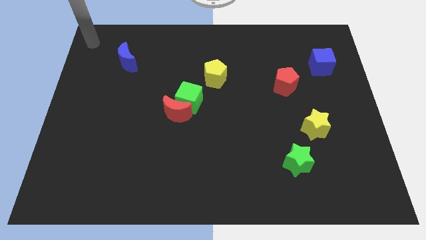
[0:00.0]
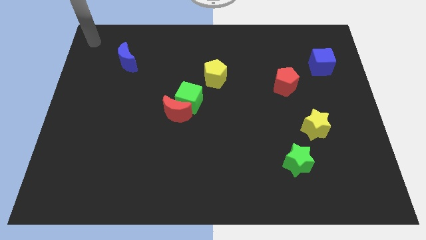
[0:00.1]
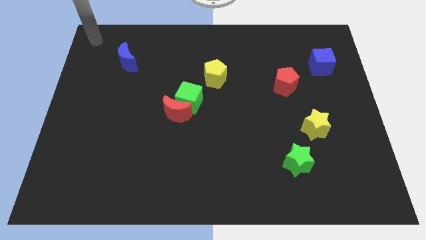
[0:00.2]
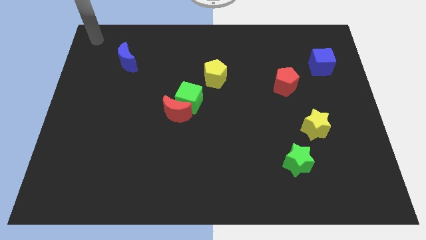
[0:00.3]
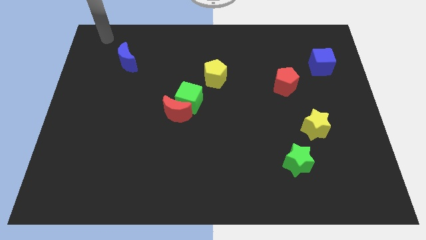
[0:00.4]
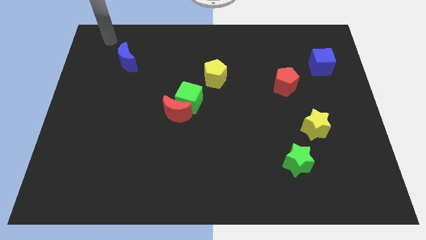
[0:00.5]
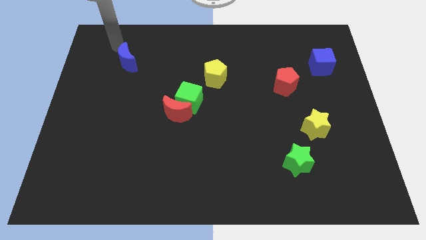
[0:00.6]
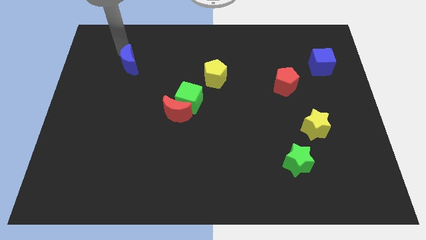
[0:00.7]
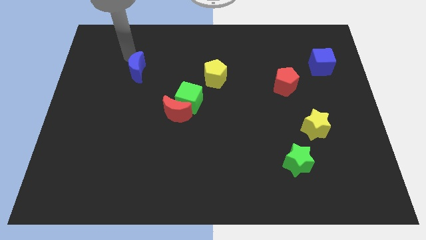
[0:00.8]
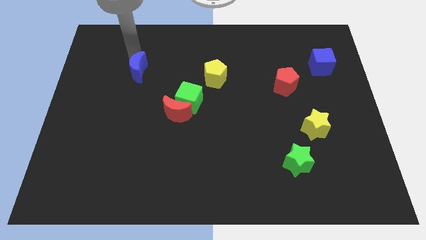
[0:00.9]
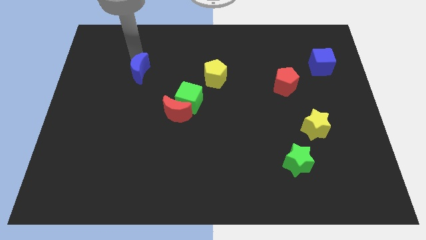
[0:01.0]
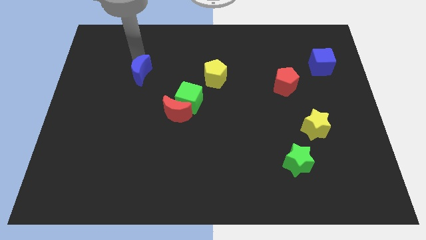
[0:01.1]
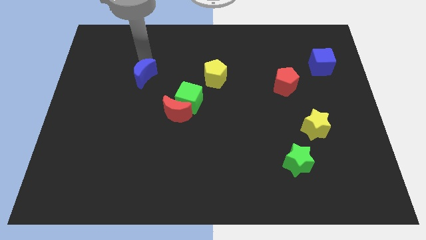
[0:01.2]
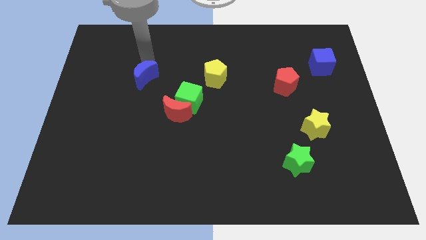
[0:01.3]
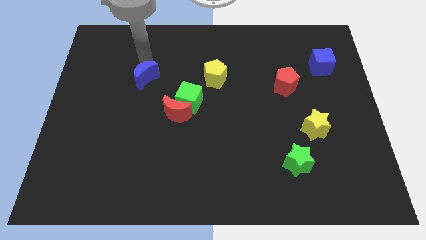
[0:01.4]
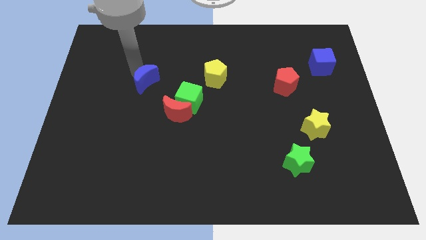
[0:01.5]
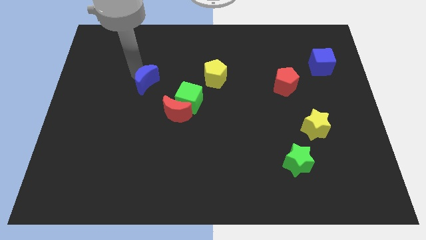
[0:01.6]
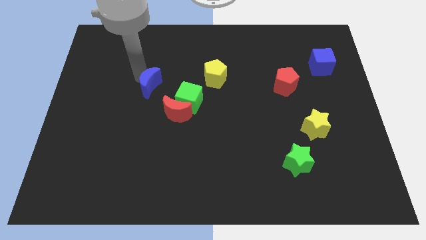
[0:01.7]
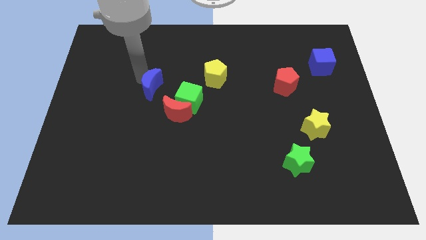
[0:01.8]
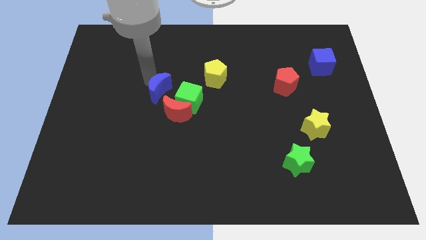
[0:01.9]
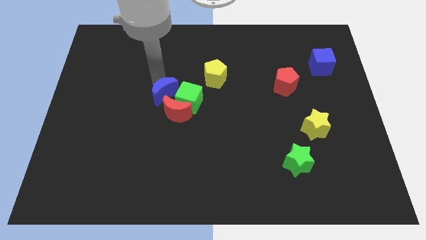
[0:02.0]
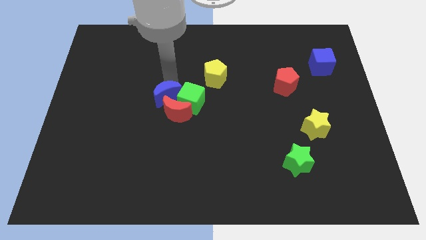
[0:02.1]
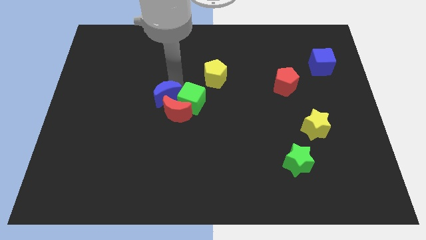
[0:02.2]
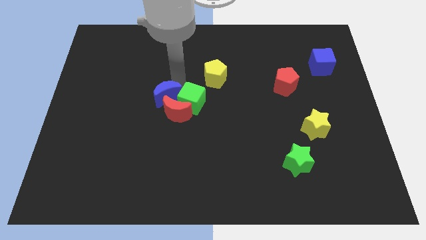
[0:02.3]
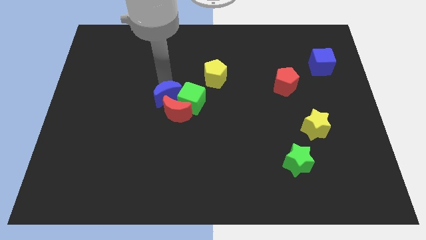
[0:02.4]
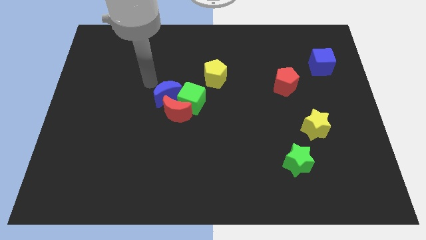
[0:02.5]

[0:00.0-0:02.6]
move the blue moon closer to the blue cube

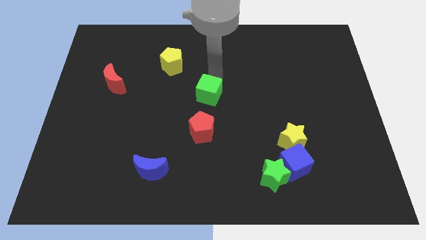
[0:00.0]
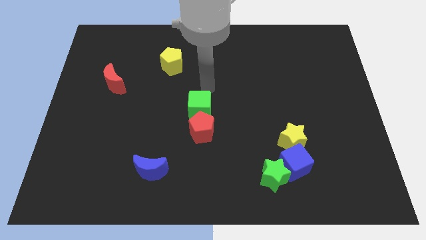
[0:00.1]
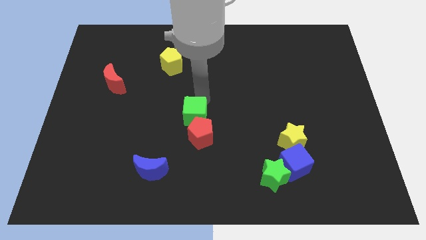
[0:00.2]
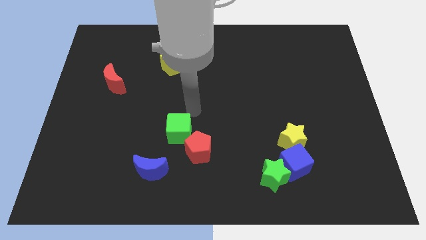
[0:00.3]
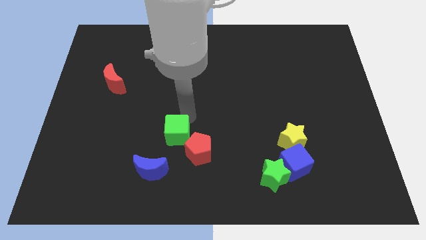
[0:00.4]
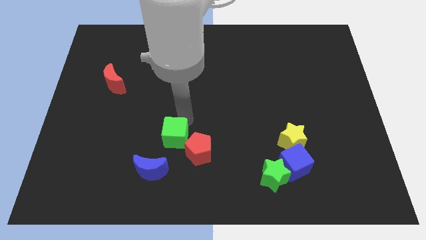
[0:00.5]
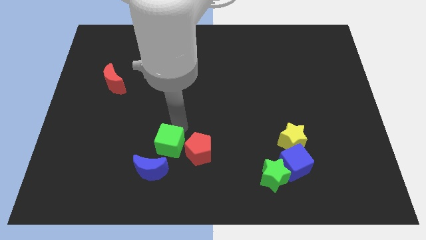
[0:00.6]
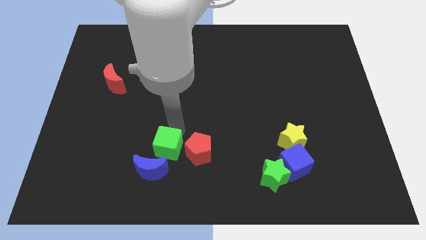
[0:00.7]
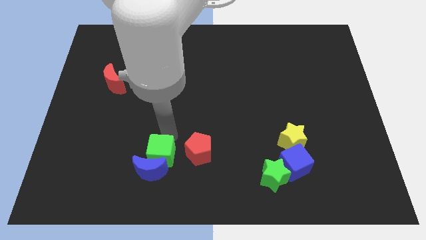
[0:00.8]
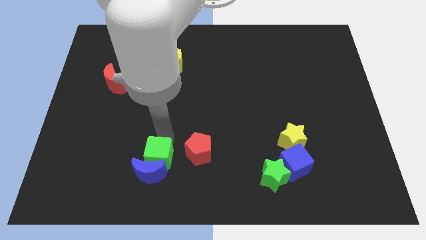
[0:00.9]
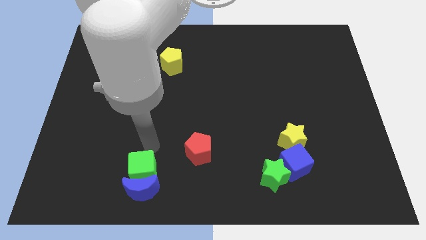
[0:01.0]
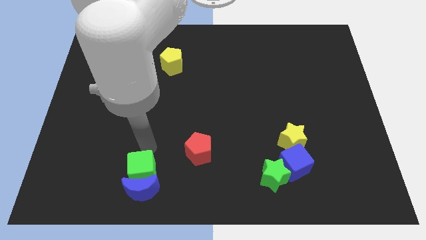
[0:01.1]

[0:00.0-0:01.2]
place the green cube above the blue crescent

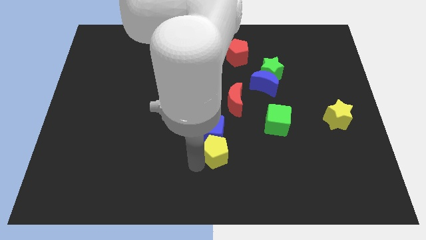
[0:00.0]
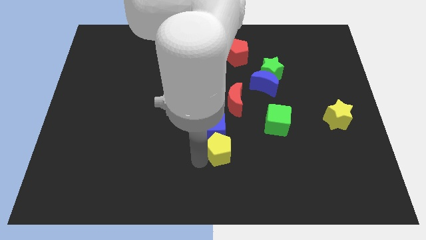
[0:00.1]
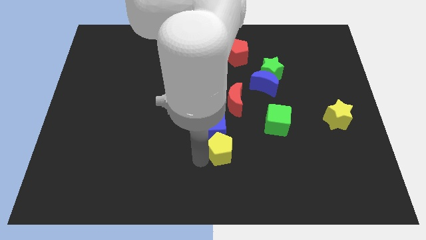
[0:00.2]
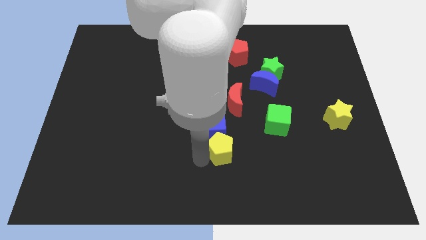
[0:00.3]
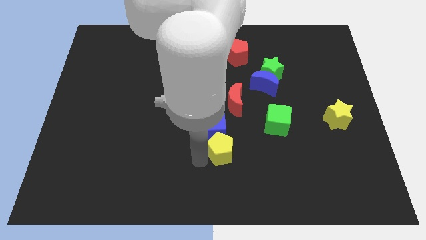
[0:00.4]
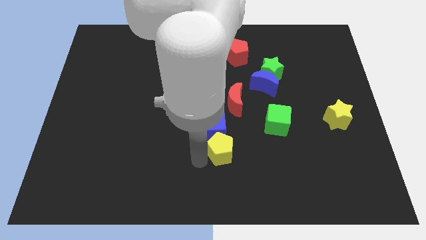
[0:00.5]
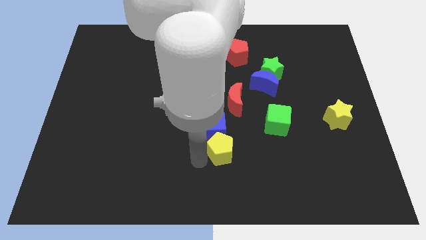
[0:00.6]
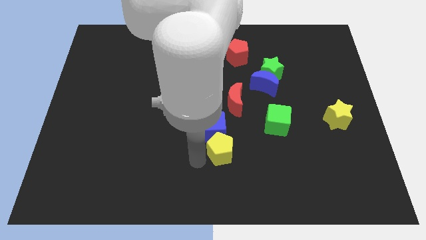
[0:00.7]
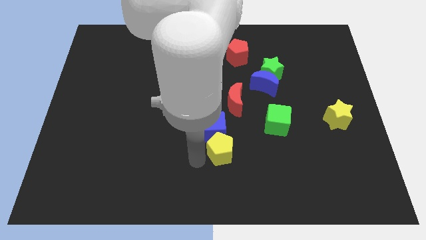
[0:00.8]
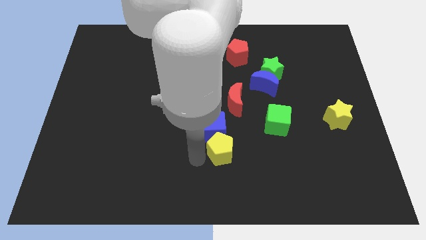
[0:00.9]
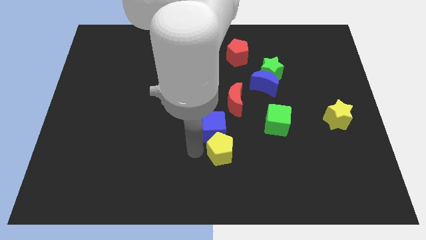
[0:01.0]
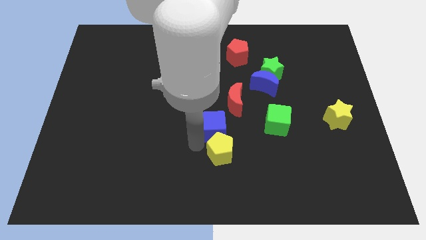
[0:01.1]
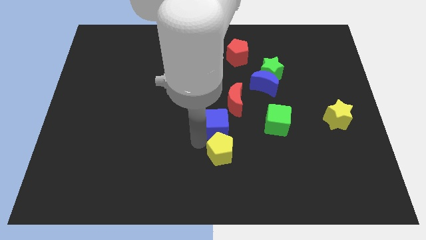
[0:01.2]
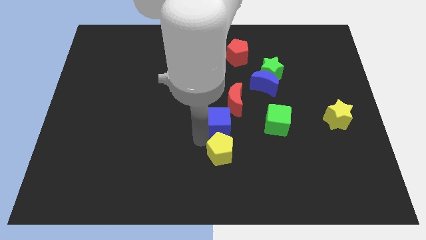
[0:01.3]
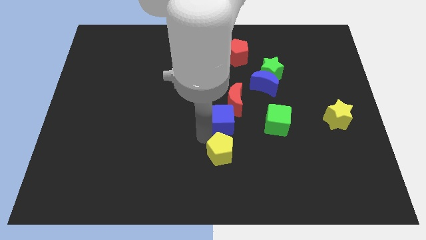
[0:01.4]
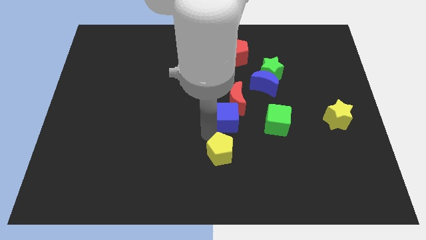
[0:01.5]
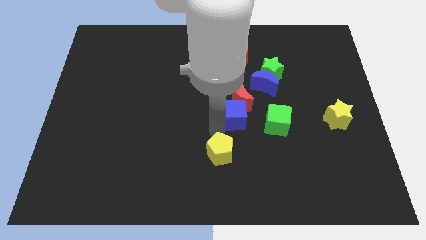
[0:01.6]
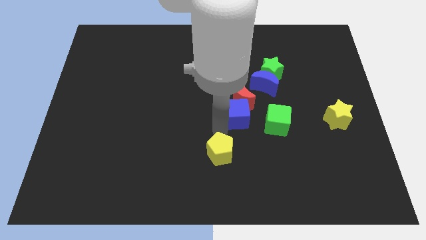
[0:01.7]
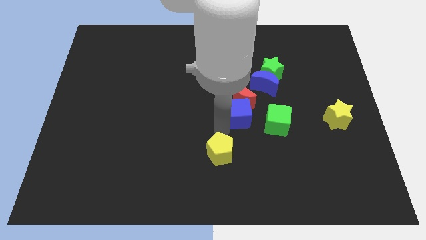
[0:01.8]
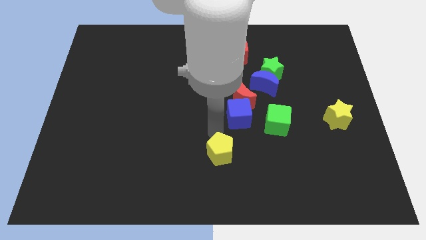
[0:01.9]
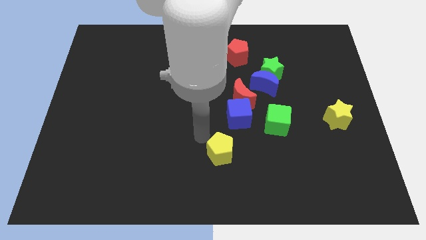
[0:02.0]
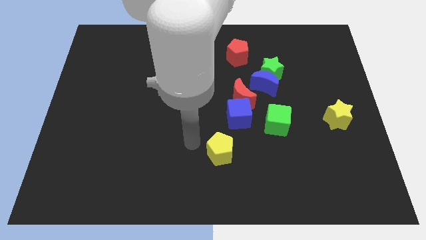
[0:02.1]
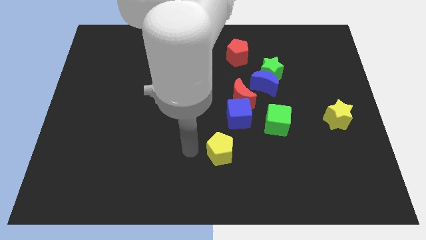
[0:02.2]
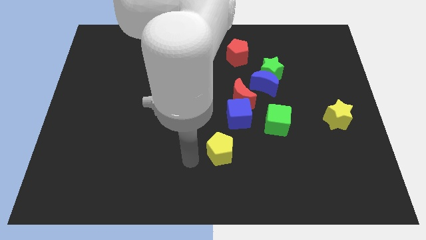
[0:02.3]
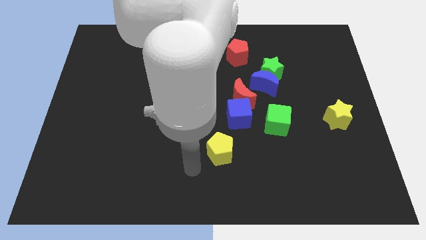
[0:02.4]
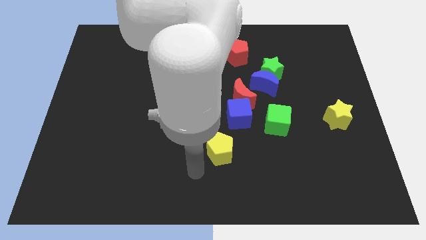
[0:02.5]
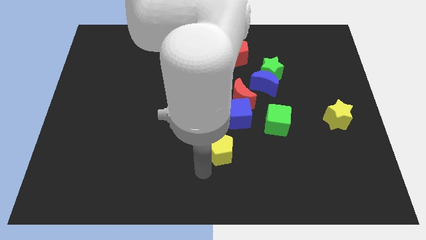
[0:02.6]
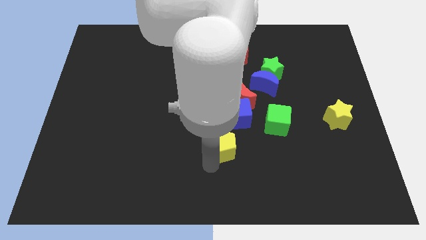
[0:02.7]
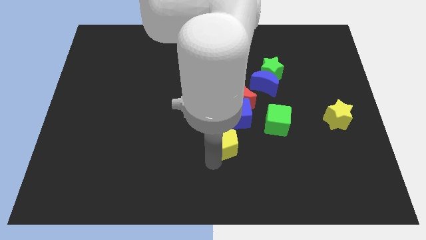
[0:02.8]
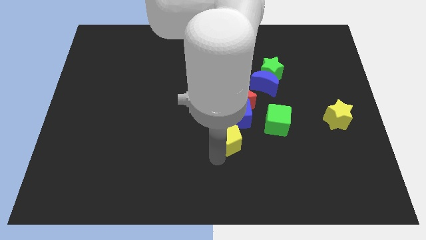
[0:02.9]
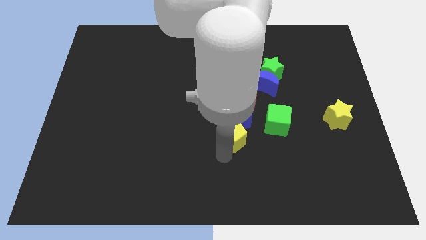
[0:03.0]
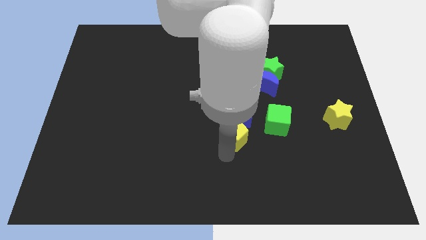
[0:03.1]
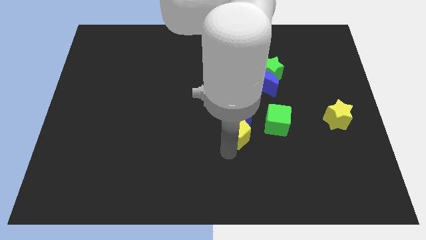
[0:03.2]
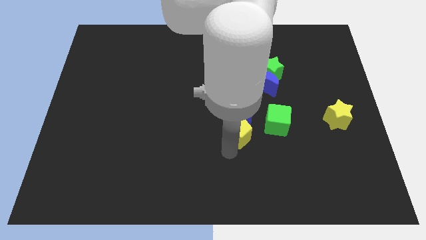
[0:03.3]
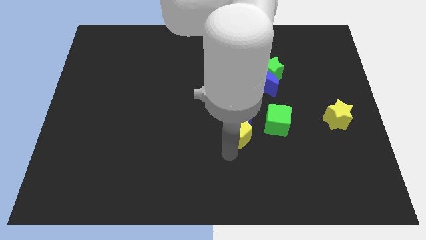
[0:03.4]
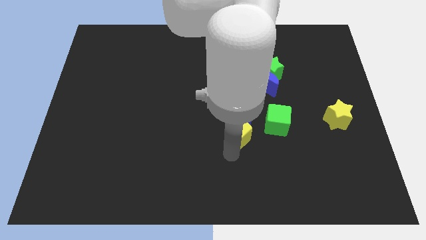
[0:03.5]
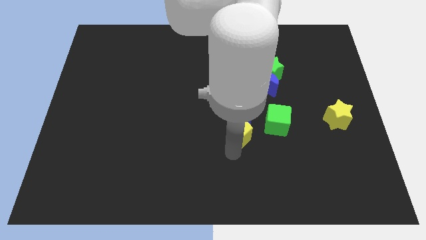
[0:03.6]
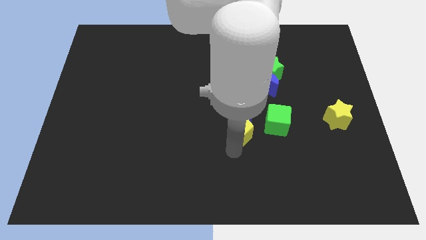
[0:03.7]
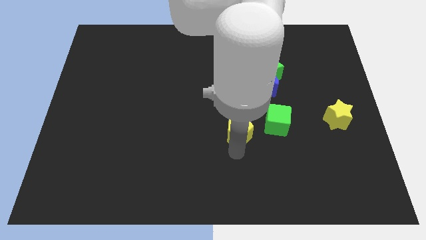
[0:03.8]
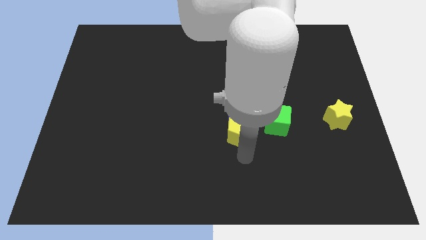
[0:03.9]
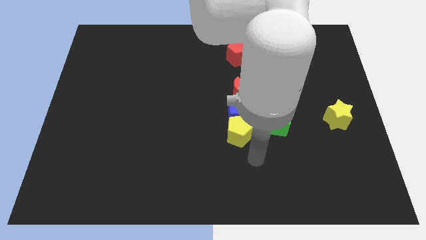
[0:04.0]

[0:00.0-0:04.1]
place the yellow pentagon and blue cube to the bottom side of the red moon

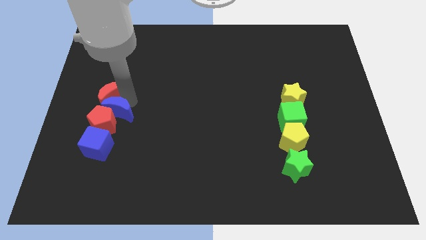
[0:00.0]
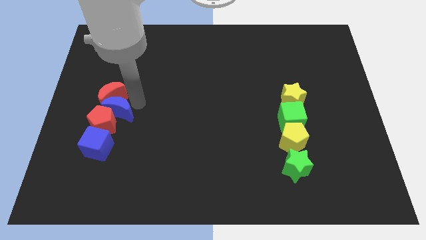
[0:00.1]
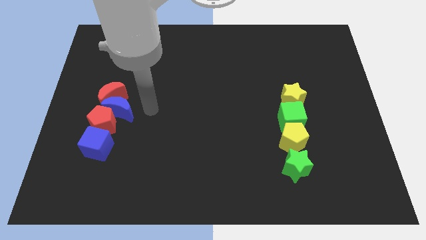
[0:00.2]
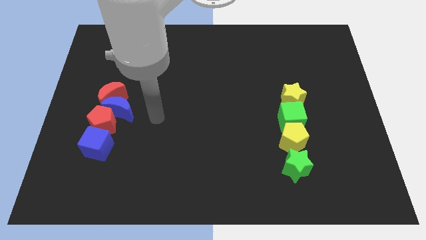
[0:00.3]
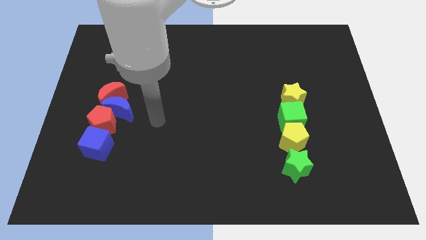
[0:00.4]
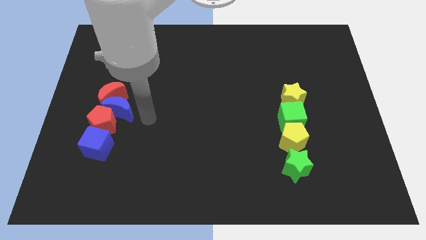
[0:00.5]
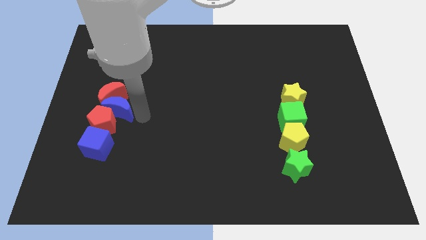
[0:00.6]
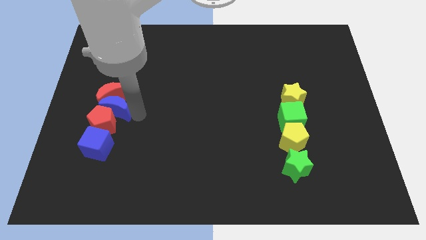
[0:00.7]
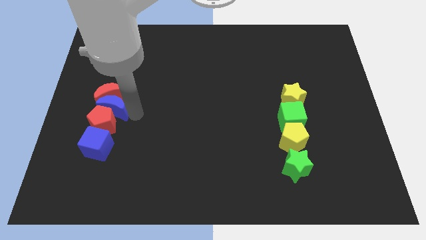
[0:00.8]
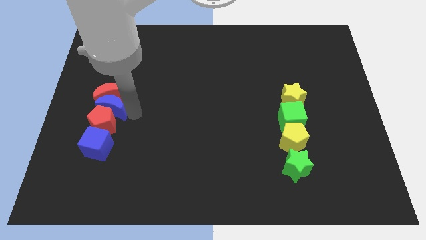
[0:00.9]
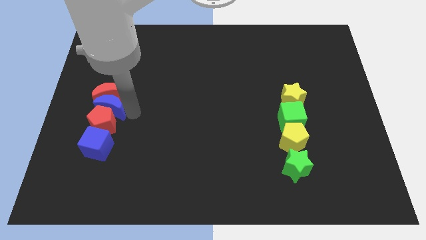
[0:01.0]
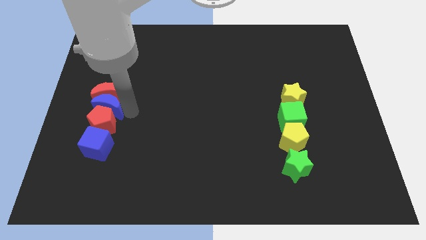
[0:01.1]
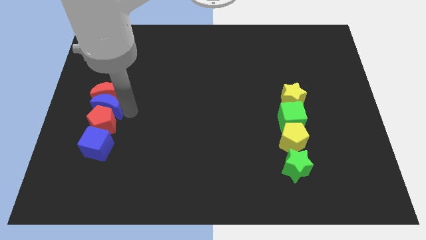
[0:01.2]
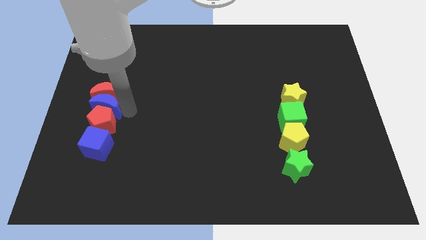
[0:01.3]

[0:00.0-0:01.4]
move the blue moon in between the red pentagon and red crescent
